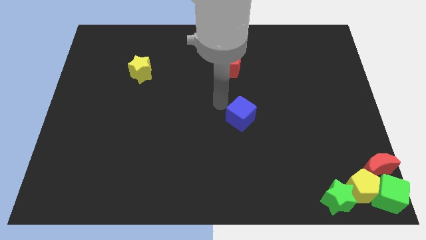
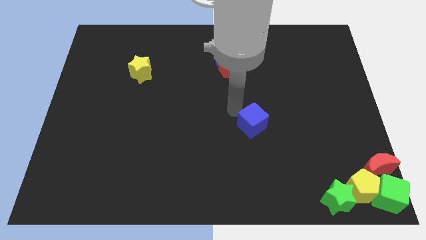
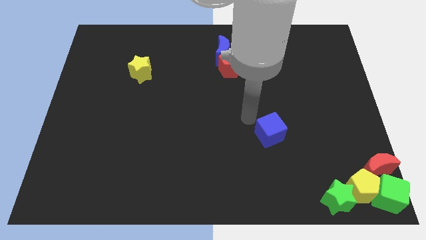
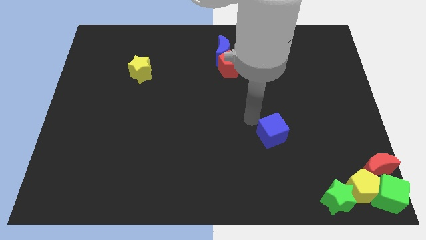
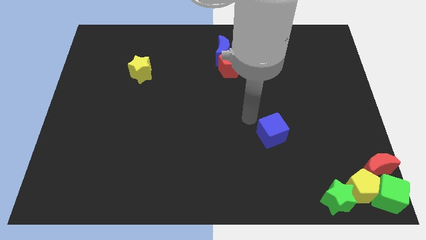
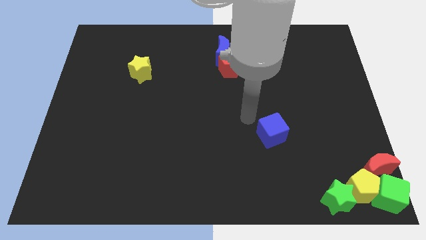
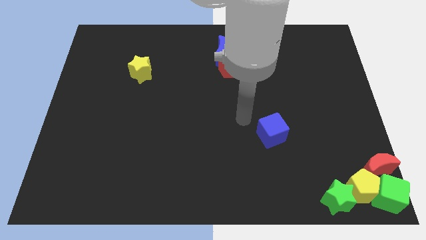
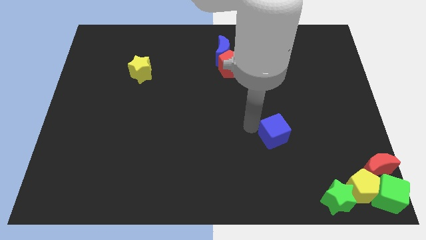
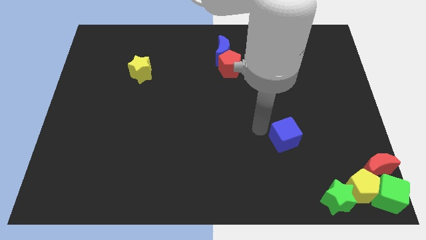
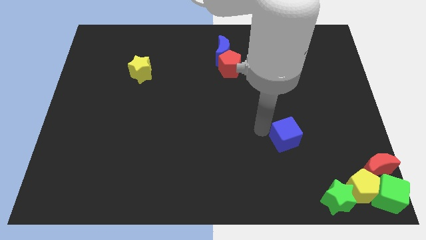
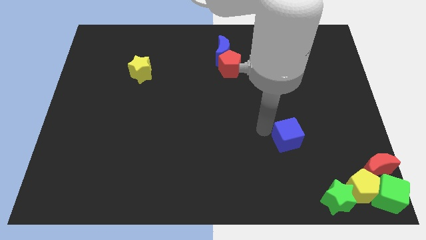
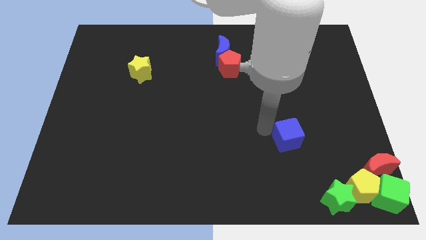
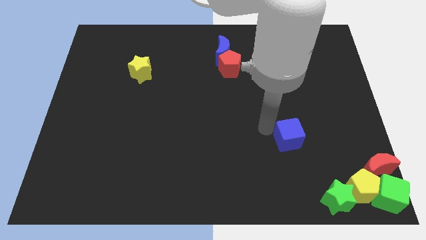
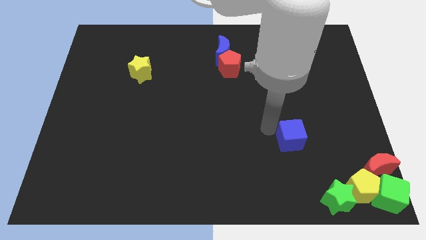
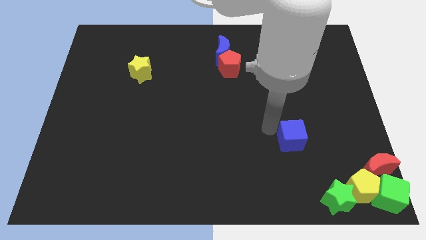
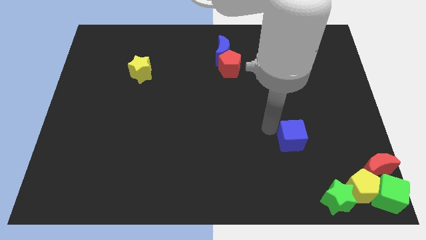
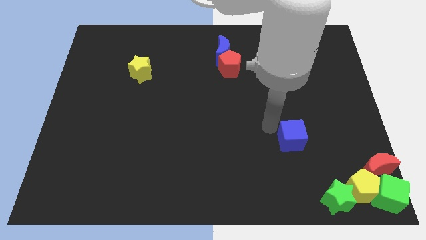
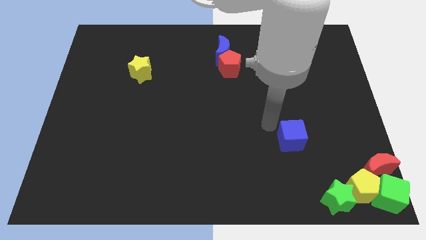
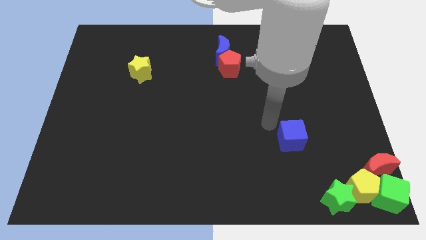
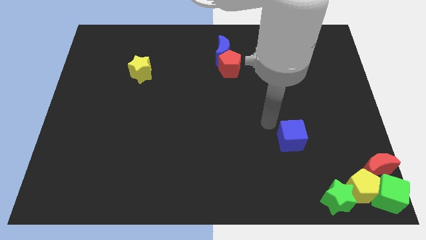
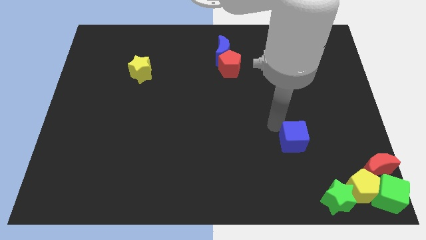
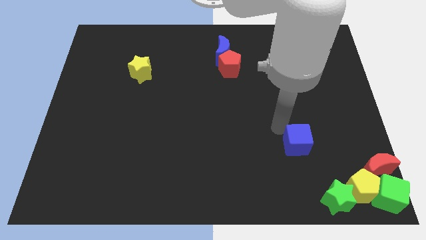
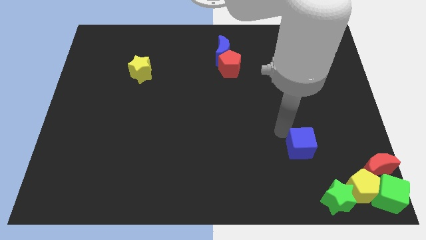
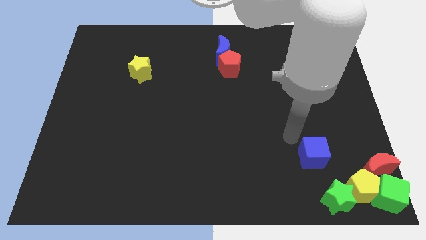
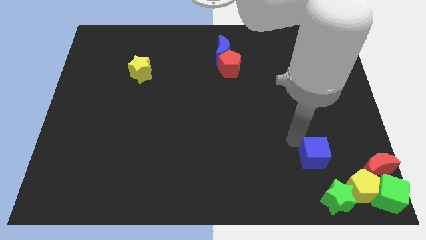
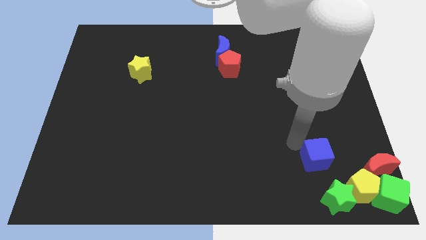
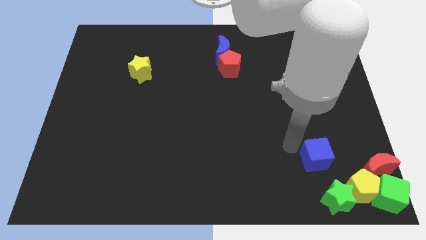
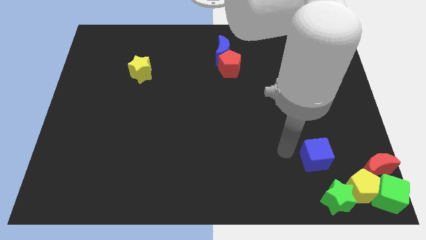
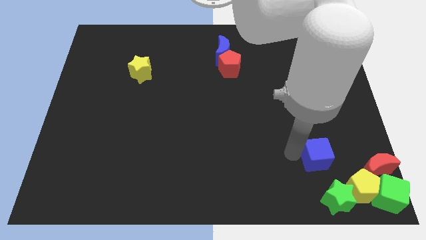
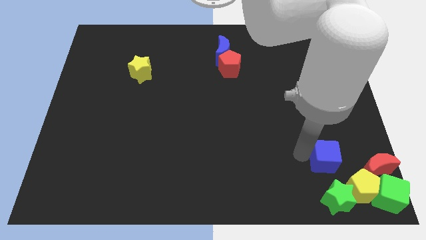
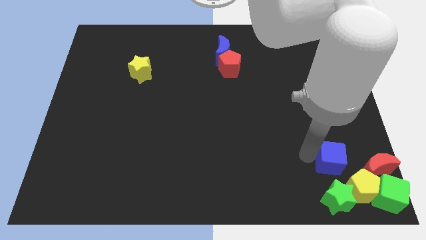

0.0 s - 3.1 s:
push blue cube above green star

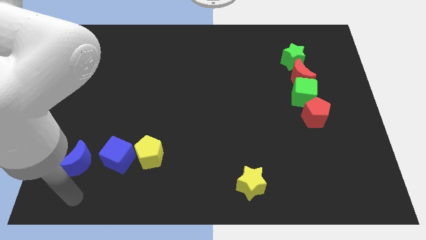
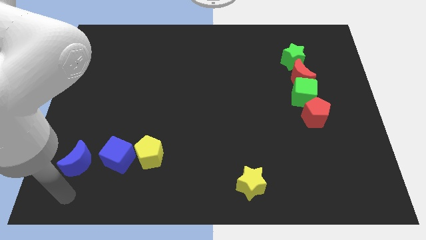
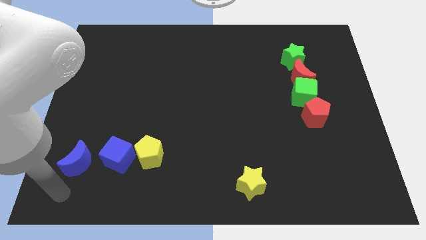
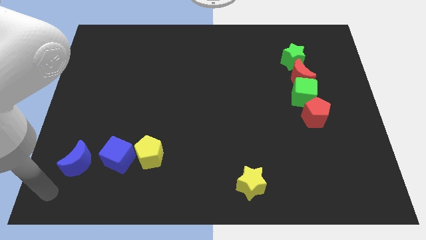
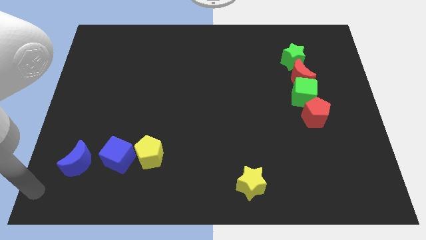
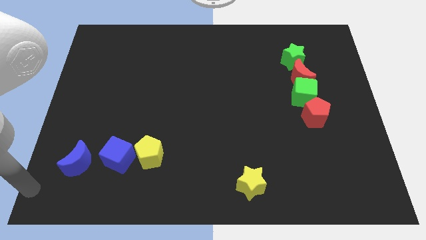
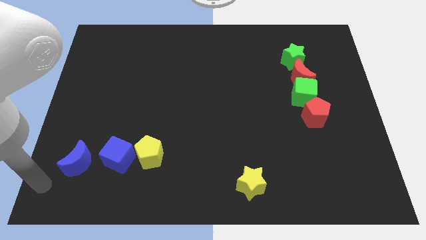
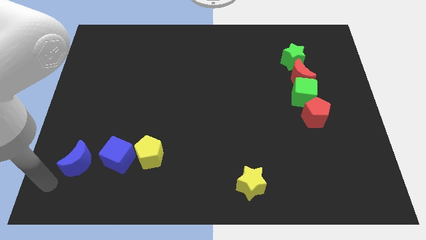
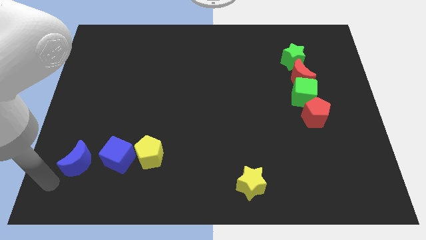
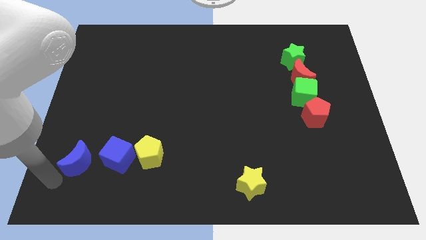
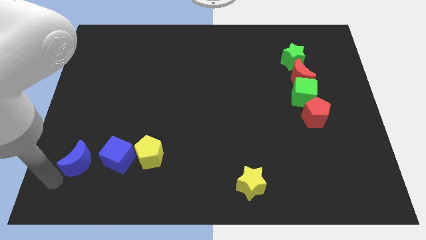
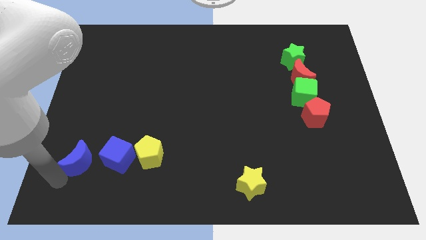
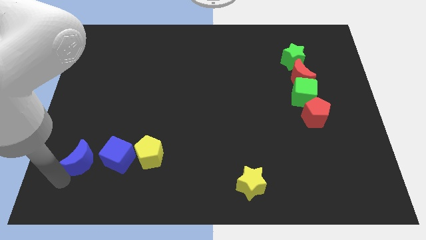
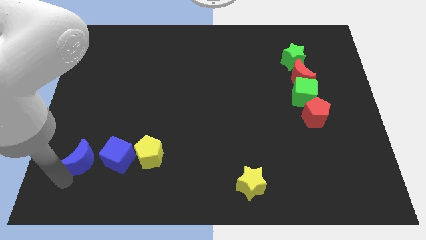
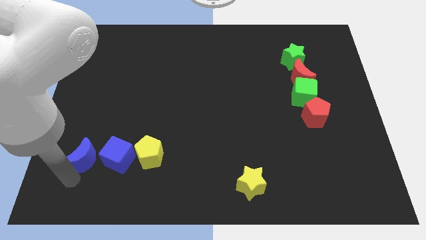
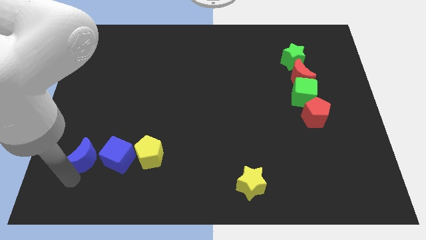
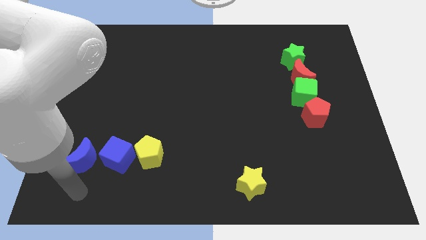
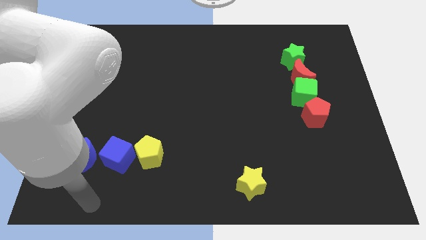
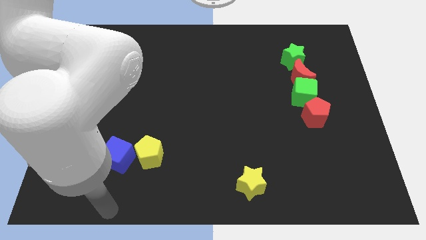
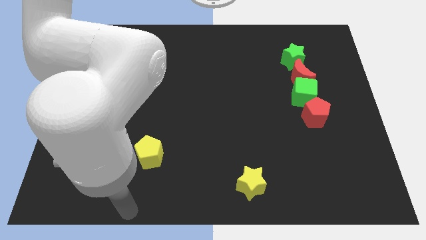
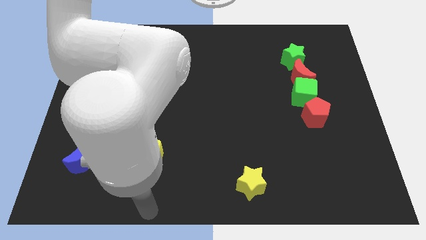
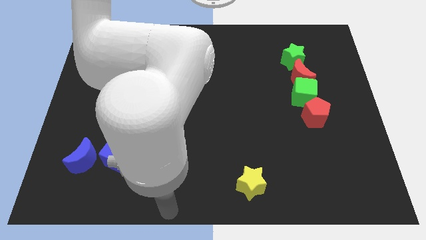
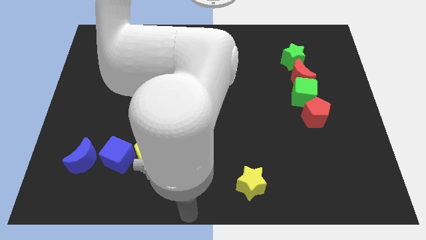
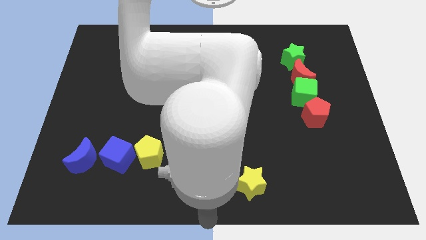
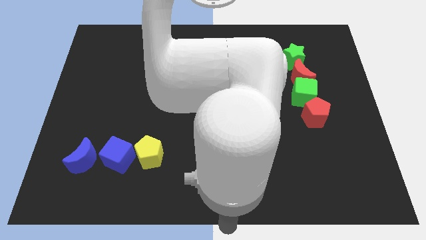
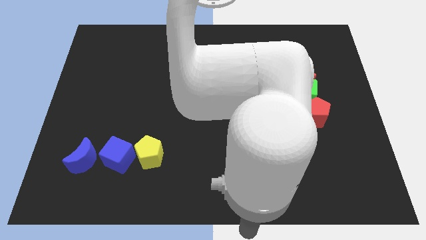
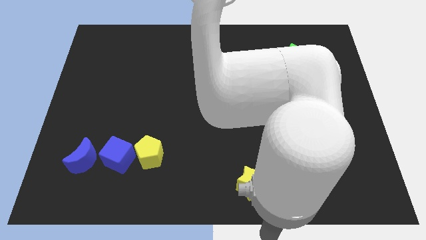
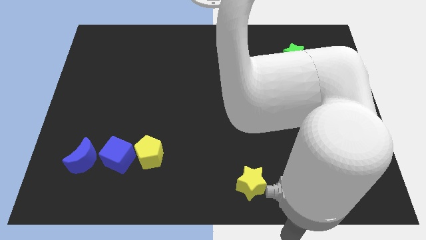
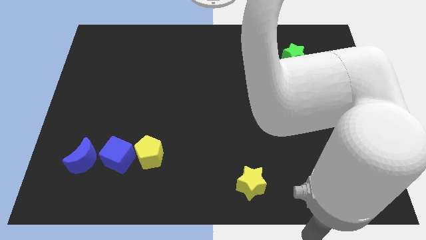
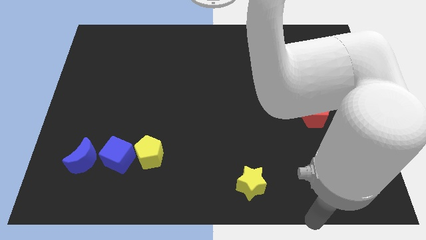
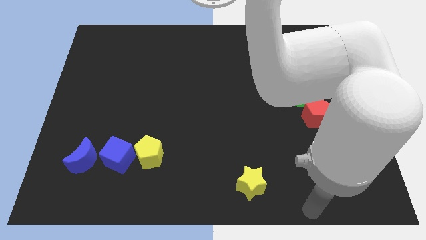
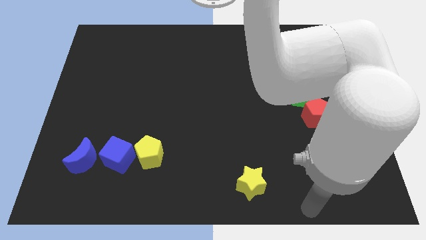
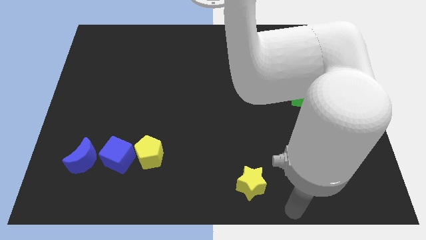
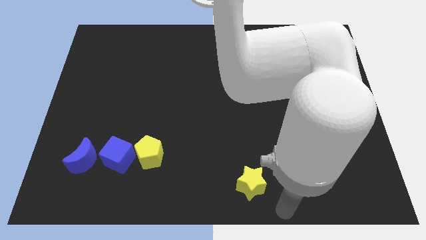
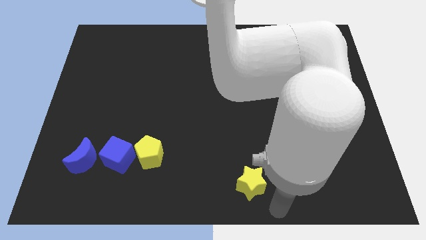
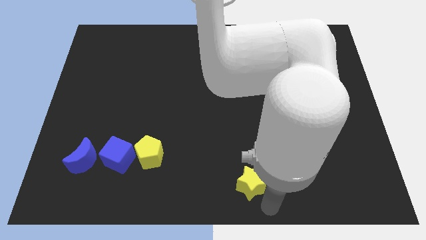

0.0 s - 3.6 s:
adjust the blue blocks to the left of the yellow pentagon

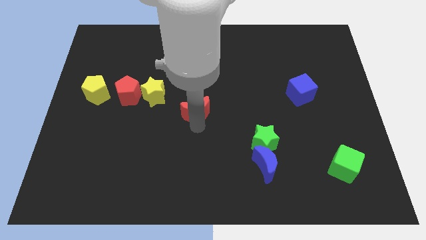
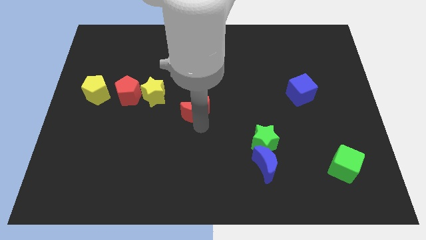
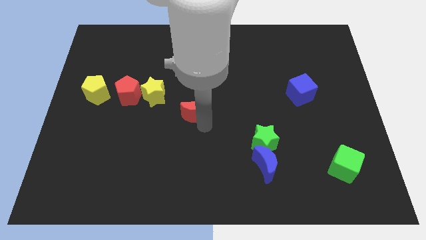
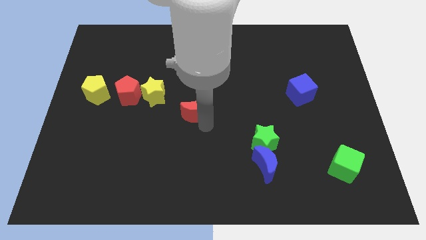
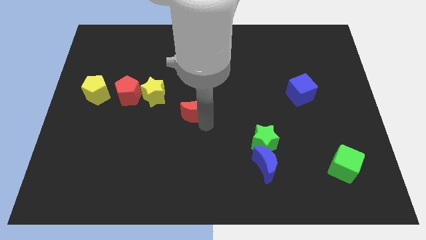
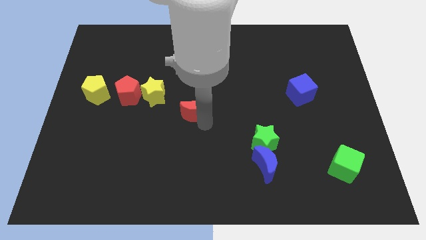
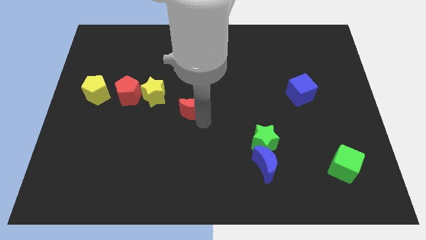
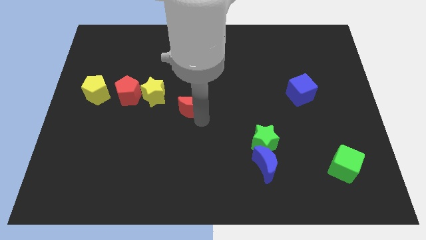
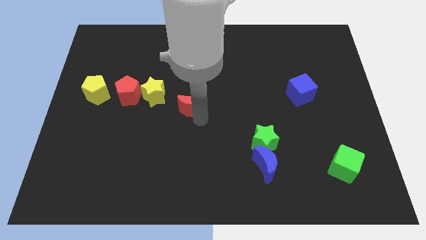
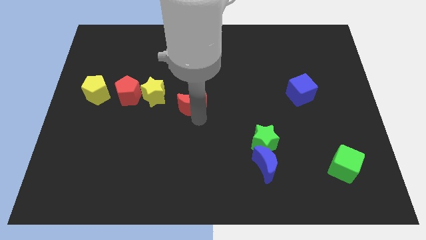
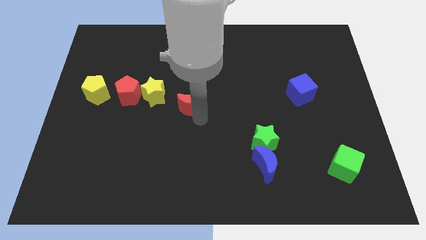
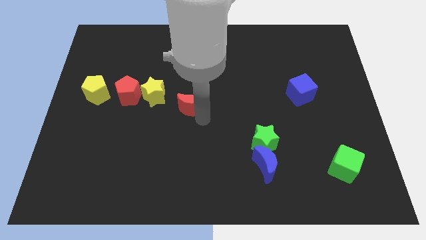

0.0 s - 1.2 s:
place the red crescent towards the bottom right side of the yellow star

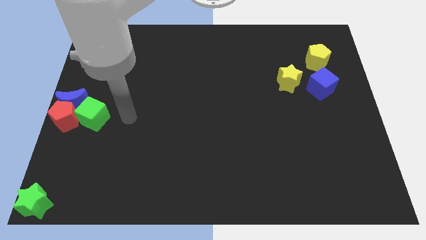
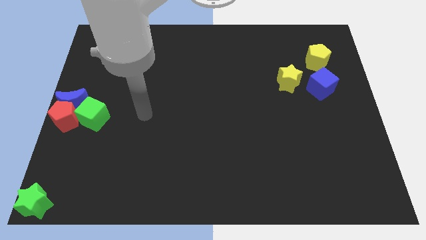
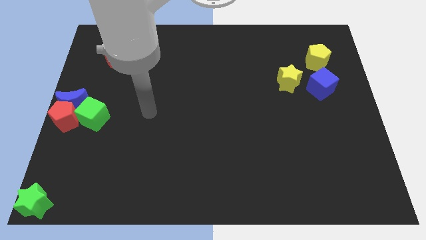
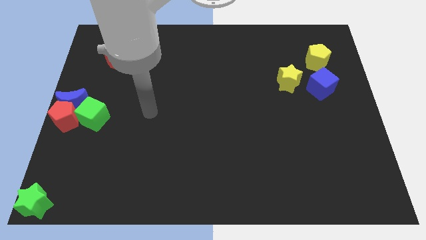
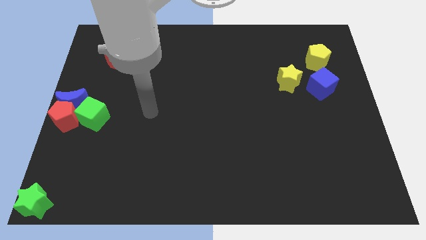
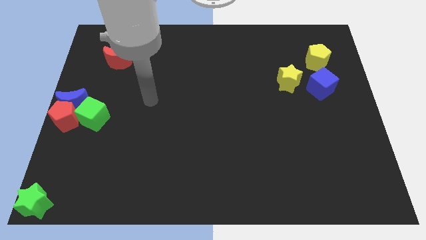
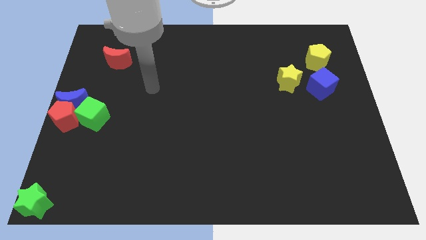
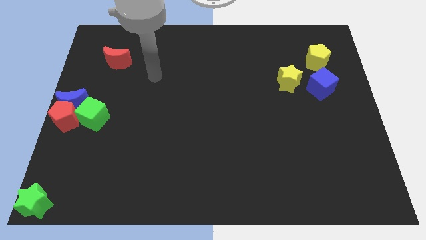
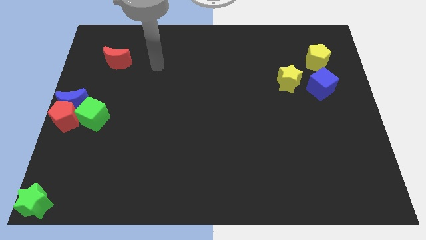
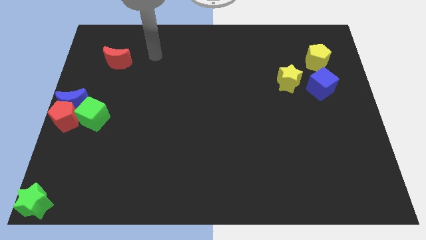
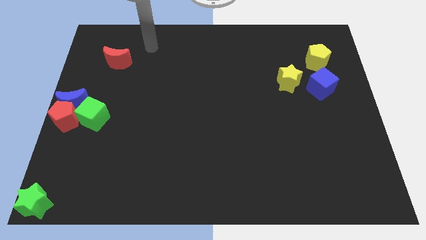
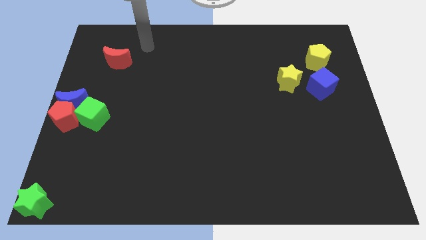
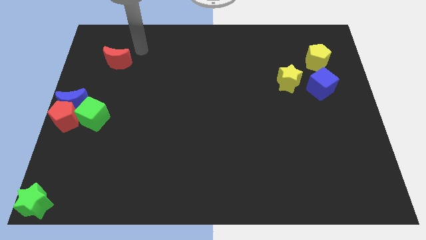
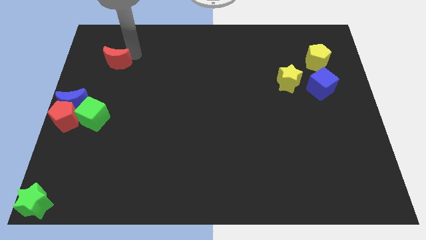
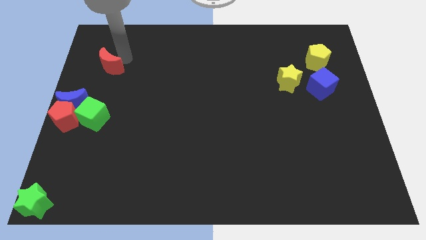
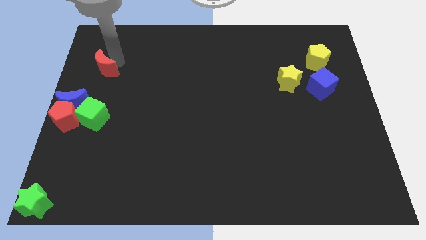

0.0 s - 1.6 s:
push red moon slightly down
